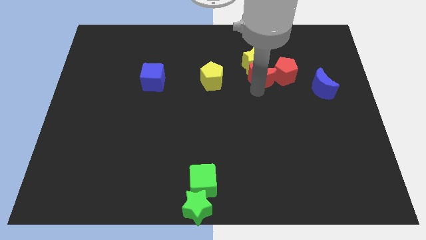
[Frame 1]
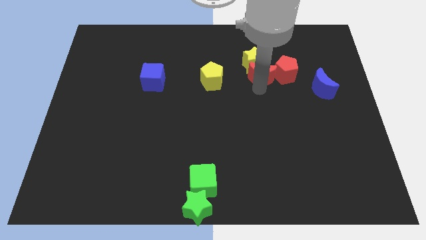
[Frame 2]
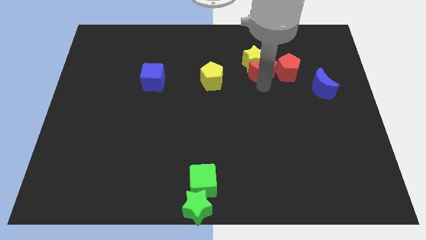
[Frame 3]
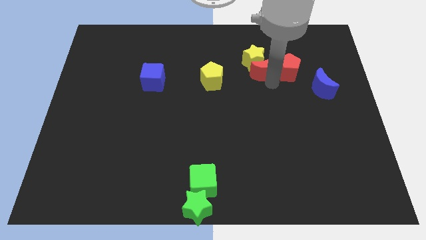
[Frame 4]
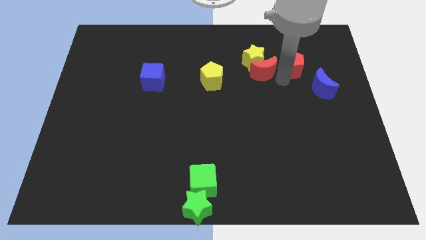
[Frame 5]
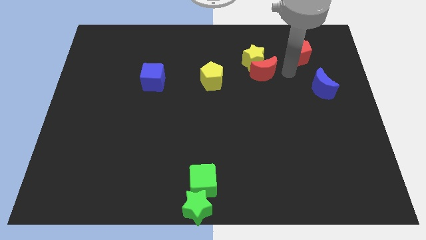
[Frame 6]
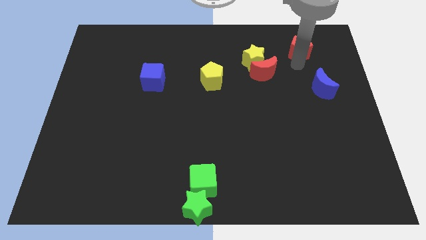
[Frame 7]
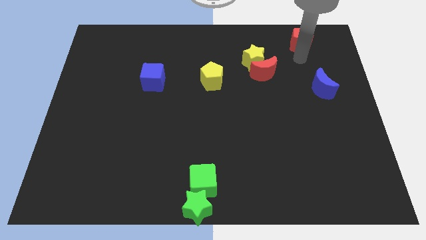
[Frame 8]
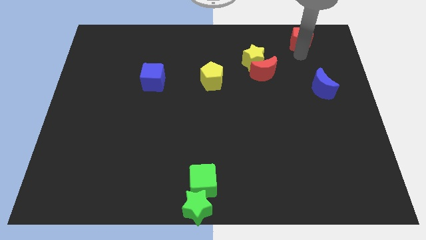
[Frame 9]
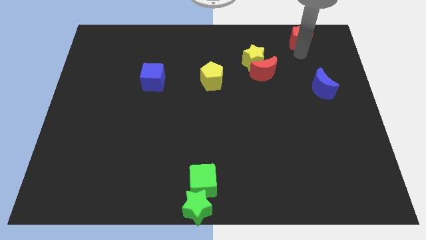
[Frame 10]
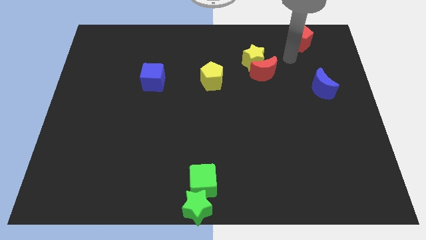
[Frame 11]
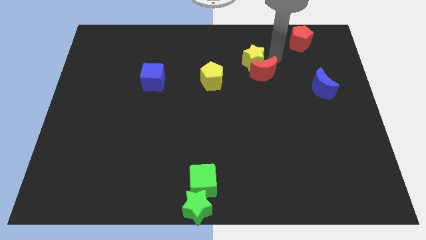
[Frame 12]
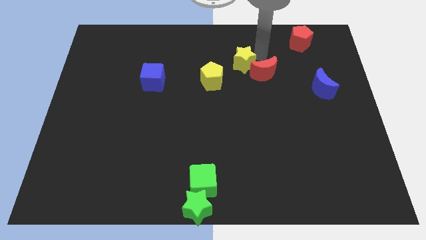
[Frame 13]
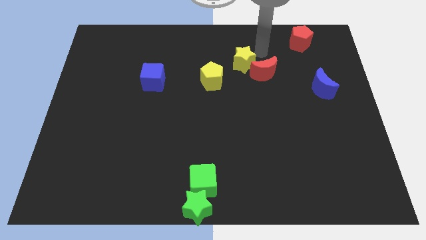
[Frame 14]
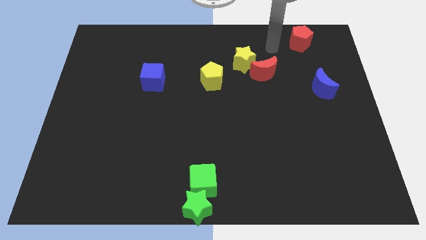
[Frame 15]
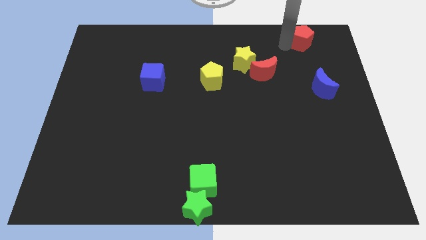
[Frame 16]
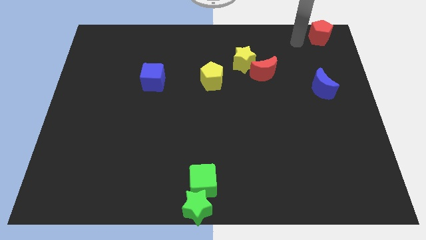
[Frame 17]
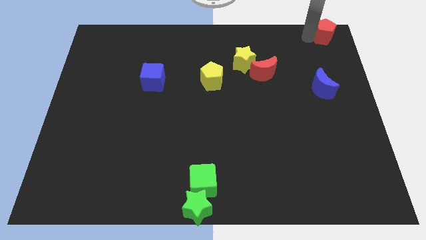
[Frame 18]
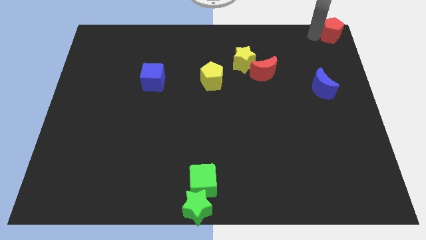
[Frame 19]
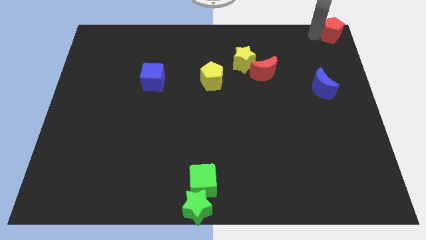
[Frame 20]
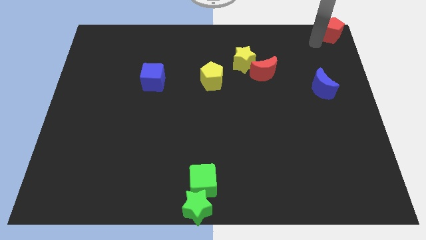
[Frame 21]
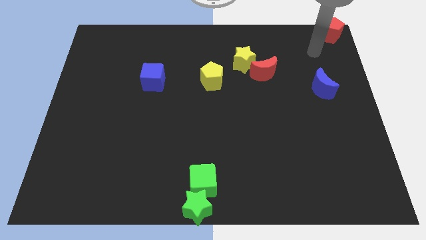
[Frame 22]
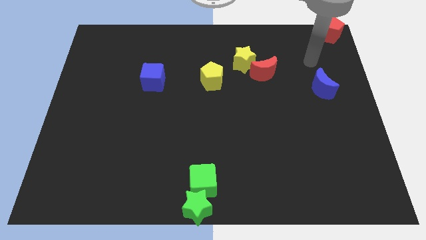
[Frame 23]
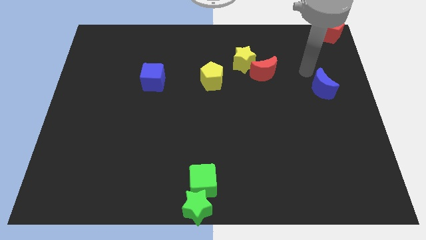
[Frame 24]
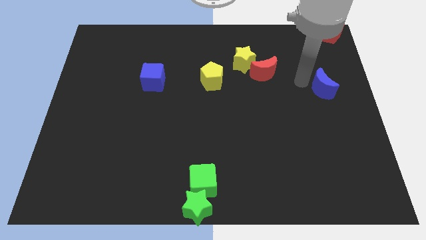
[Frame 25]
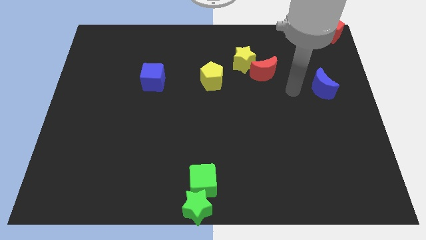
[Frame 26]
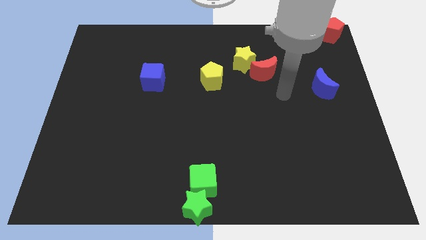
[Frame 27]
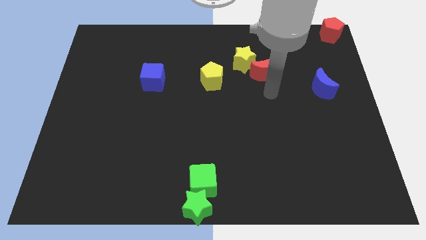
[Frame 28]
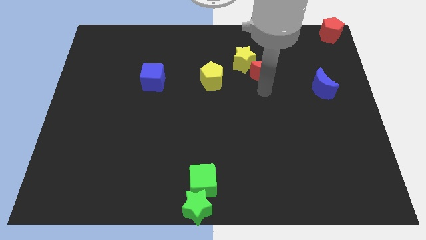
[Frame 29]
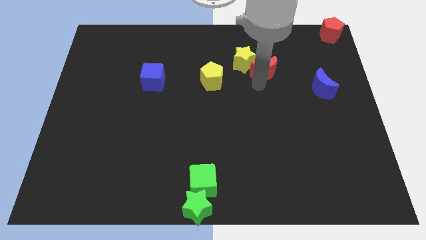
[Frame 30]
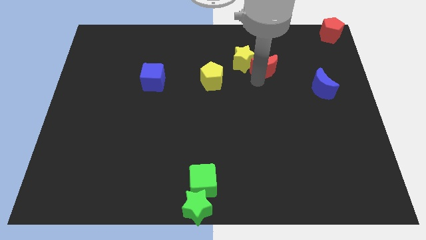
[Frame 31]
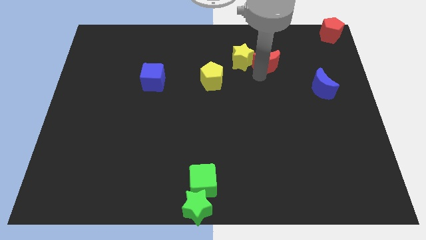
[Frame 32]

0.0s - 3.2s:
move the red pentagon to the top right corner of the board

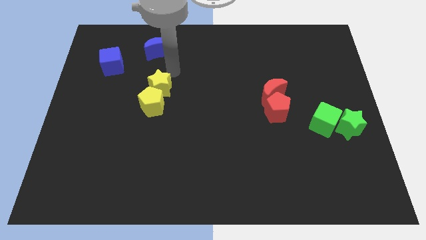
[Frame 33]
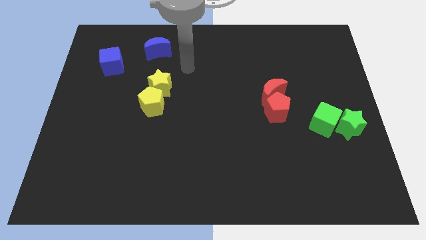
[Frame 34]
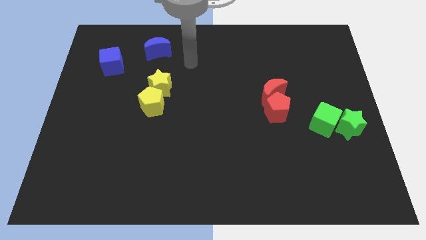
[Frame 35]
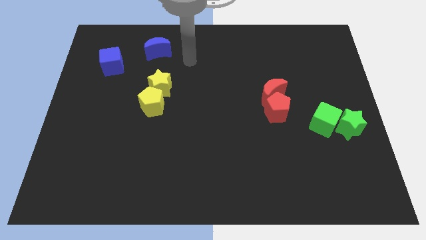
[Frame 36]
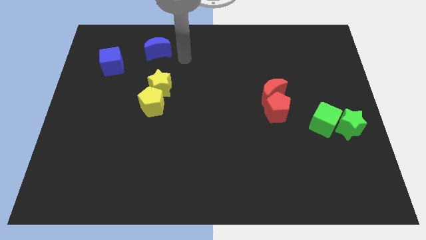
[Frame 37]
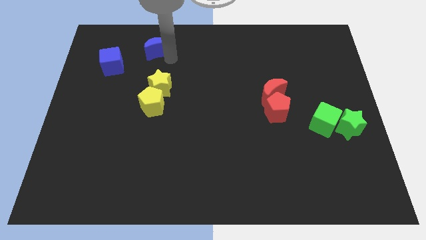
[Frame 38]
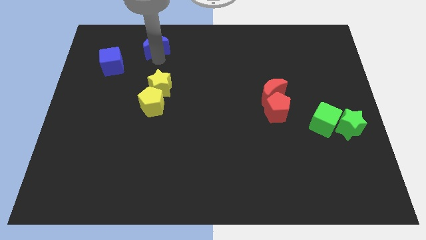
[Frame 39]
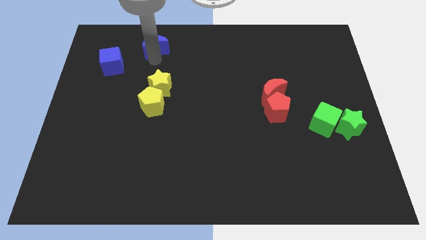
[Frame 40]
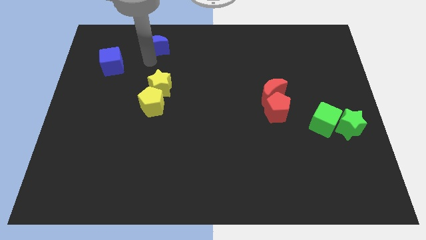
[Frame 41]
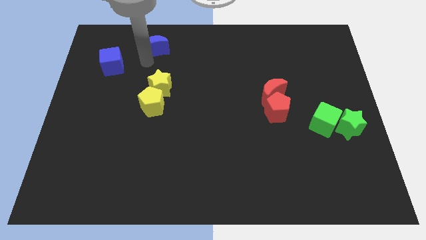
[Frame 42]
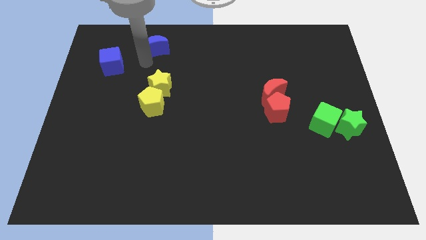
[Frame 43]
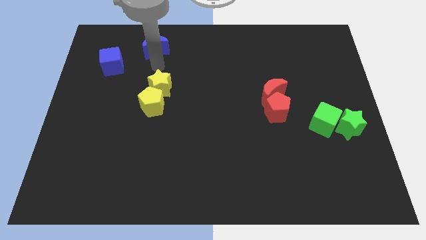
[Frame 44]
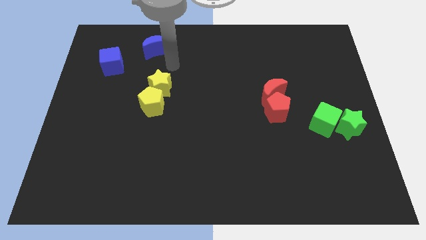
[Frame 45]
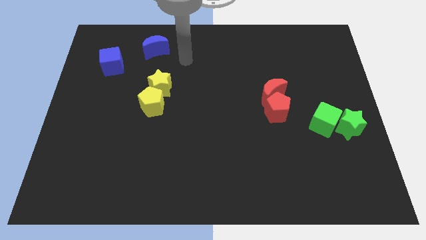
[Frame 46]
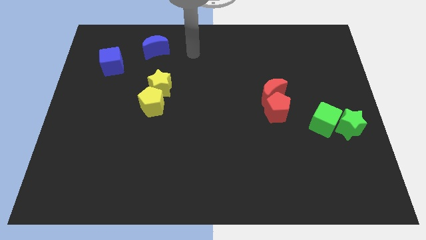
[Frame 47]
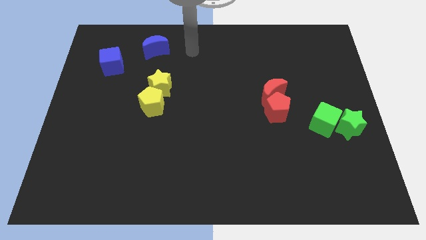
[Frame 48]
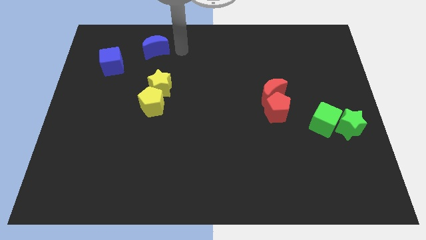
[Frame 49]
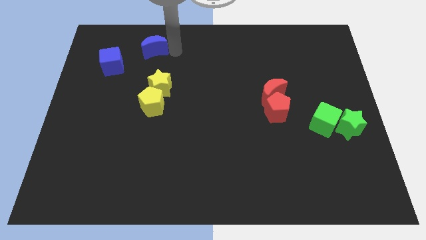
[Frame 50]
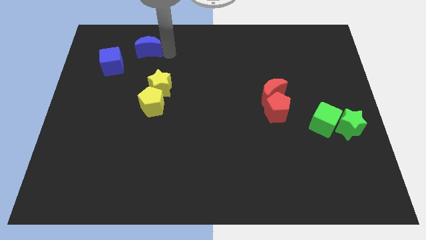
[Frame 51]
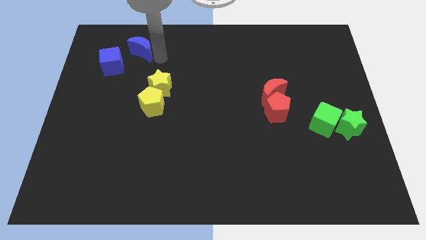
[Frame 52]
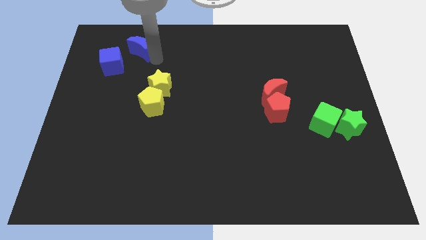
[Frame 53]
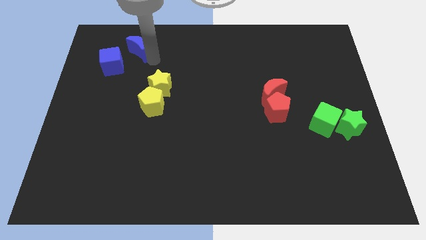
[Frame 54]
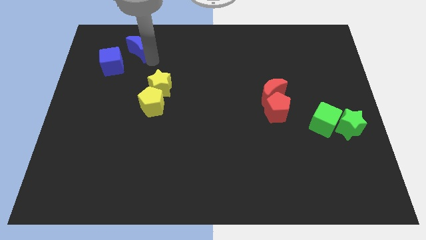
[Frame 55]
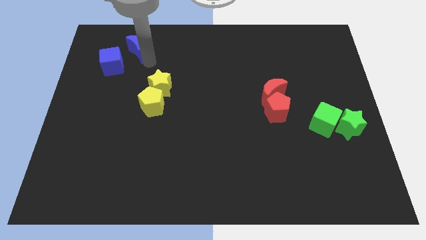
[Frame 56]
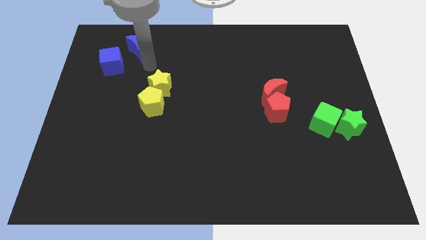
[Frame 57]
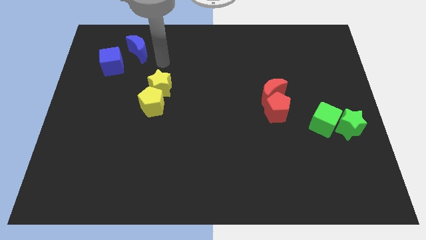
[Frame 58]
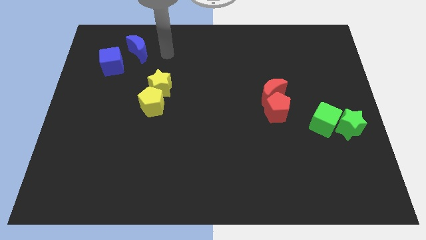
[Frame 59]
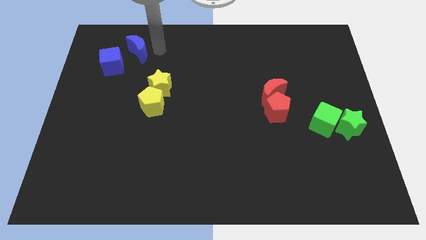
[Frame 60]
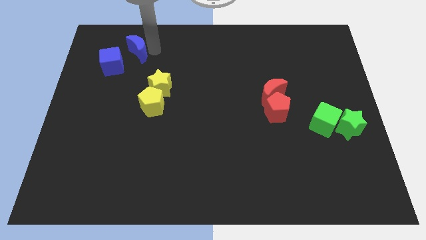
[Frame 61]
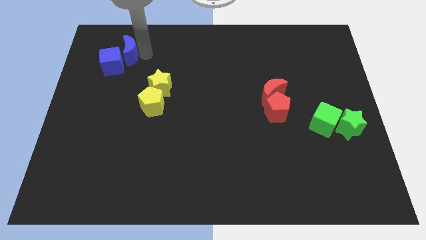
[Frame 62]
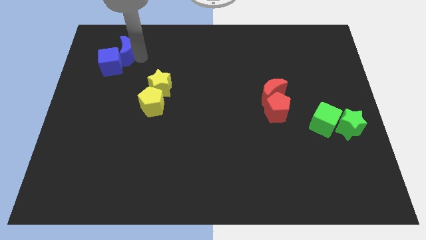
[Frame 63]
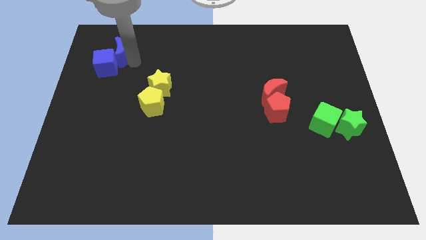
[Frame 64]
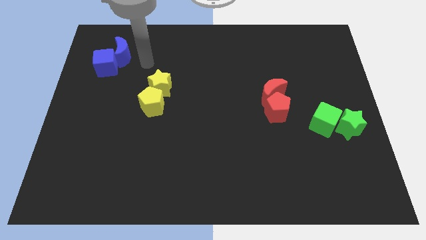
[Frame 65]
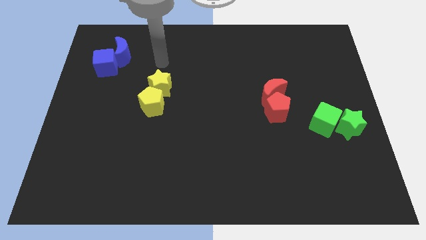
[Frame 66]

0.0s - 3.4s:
move blue moon into the blue cube

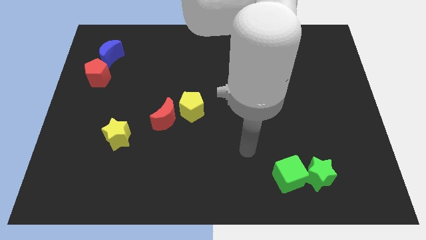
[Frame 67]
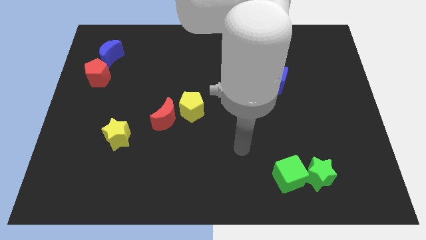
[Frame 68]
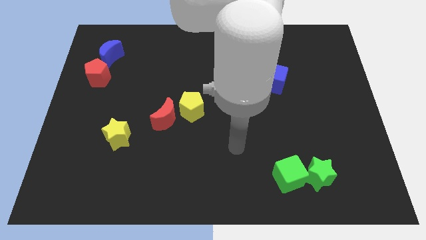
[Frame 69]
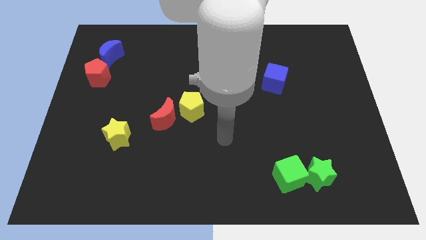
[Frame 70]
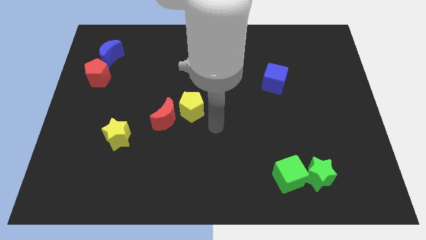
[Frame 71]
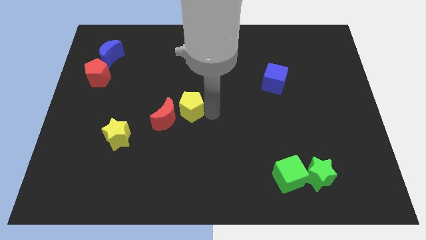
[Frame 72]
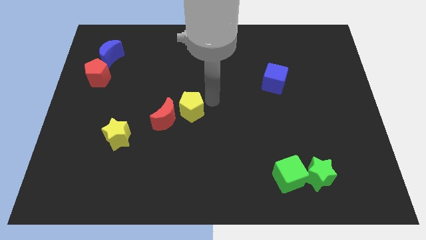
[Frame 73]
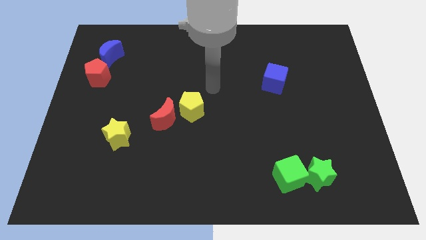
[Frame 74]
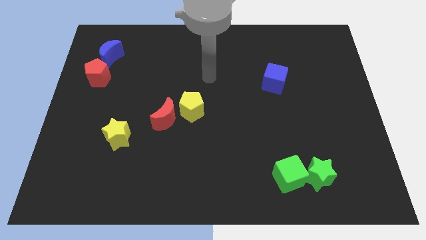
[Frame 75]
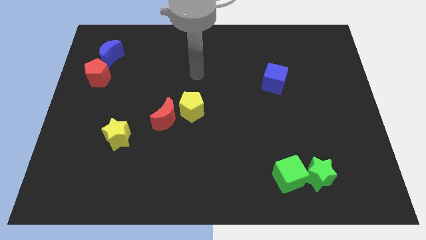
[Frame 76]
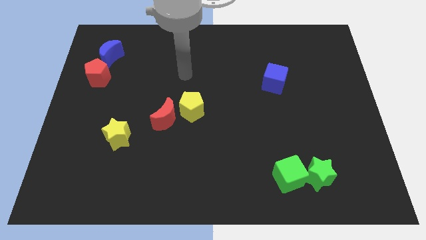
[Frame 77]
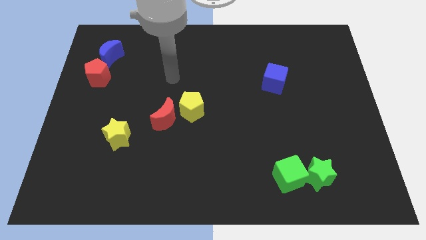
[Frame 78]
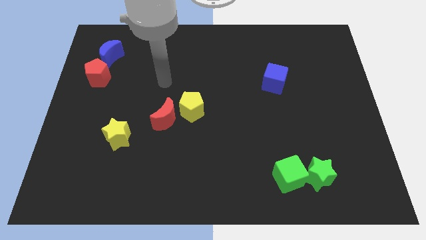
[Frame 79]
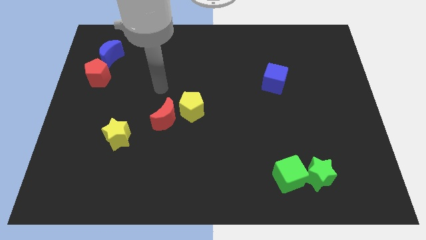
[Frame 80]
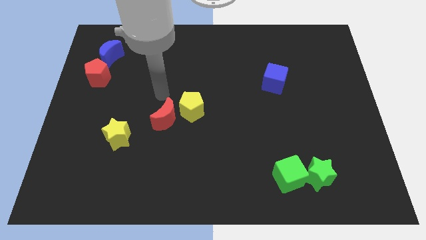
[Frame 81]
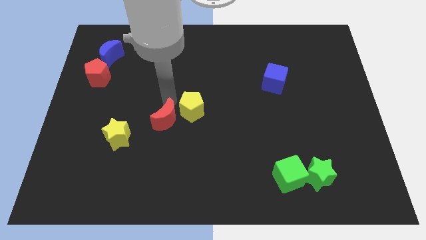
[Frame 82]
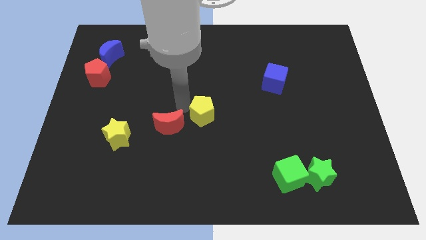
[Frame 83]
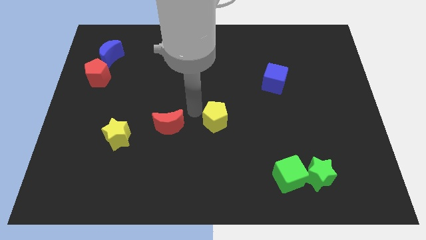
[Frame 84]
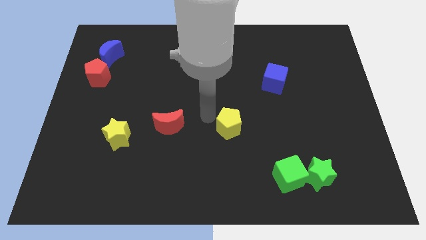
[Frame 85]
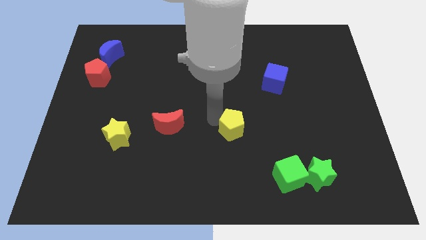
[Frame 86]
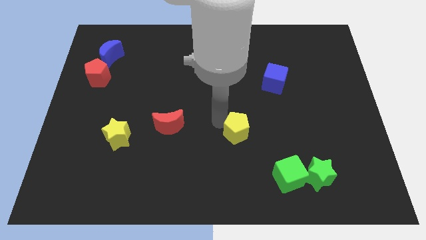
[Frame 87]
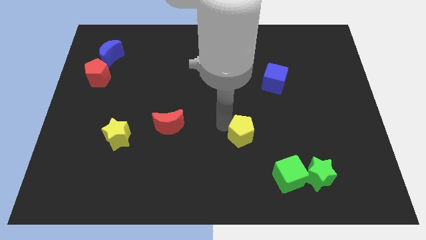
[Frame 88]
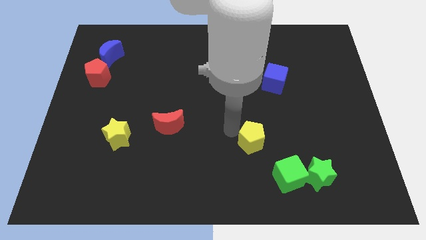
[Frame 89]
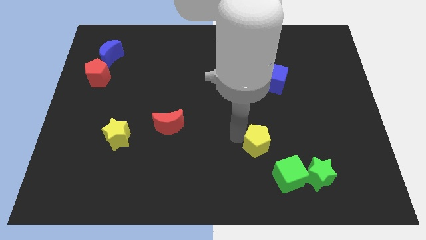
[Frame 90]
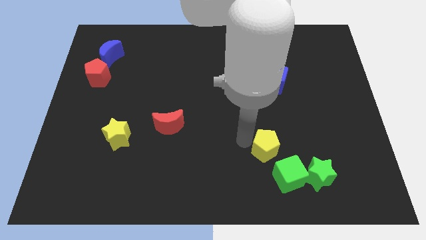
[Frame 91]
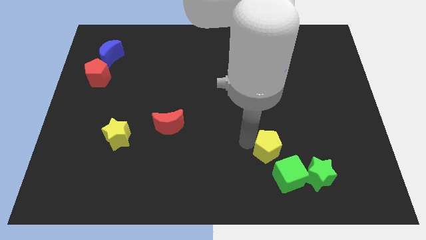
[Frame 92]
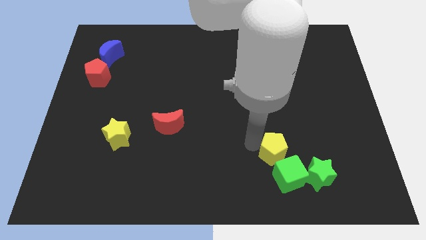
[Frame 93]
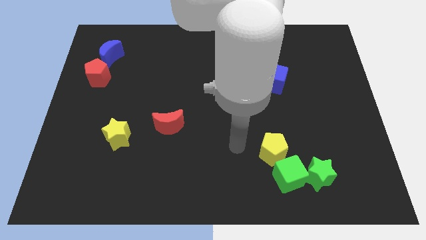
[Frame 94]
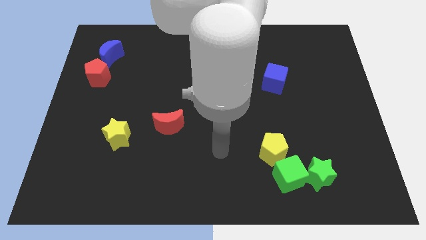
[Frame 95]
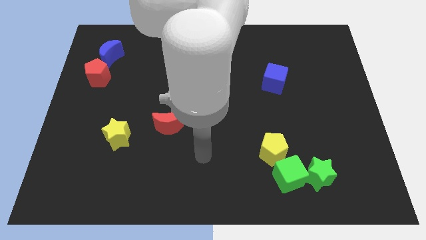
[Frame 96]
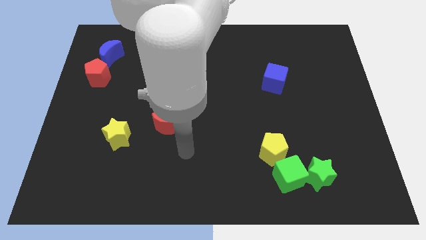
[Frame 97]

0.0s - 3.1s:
move the yellow pentagon away from the red moon
